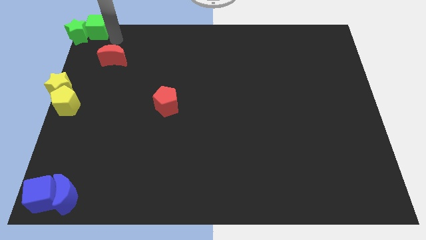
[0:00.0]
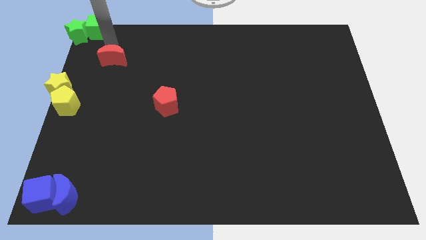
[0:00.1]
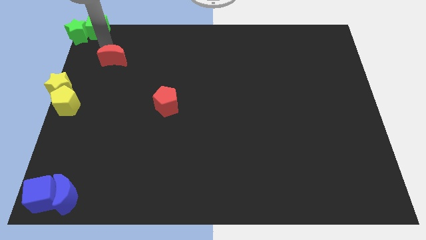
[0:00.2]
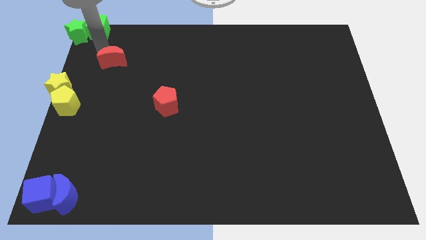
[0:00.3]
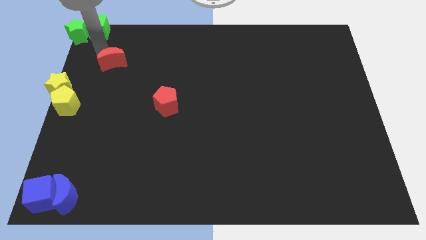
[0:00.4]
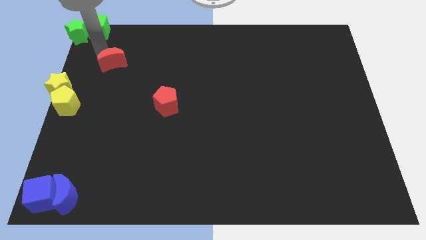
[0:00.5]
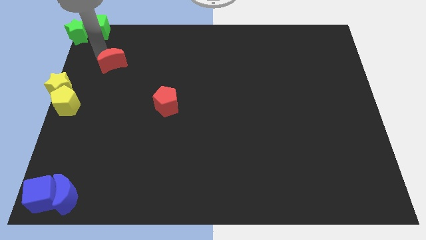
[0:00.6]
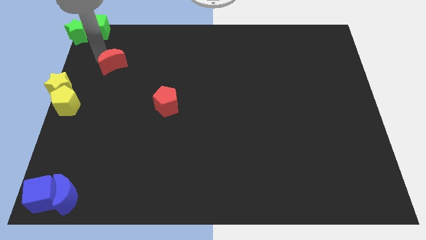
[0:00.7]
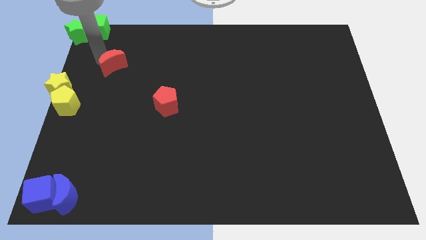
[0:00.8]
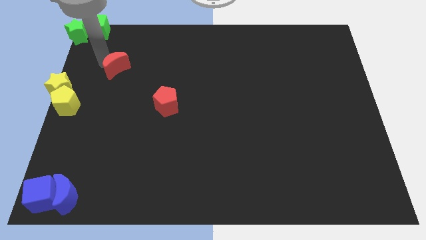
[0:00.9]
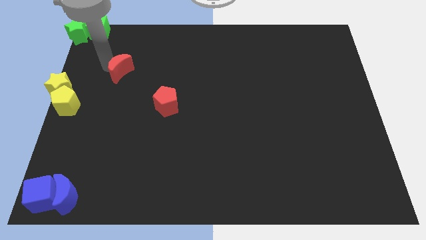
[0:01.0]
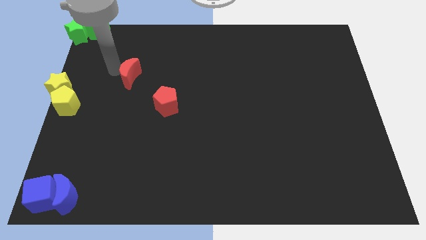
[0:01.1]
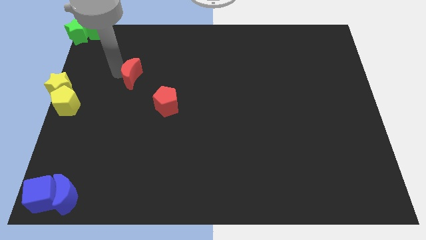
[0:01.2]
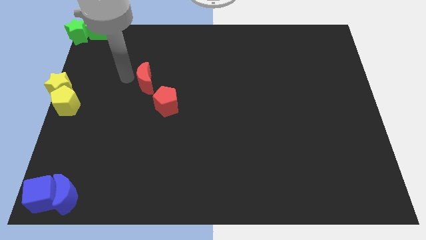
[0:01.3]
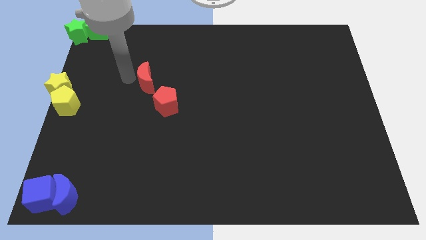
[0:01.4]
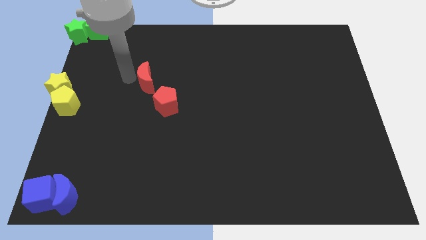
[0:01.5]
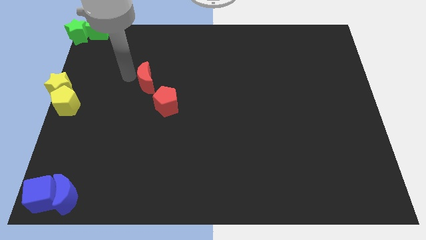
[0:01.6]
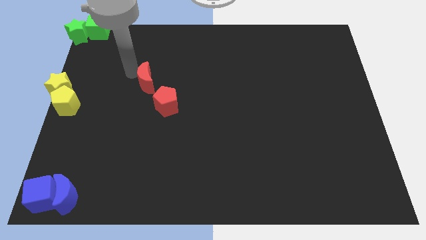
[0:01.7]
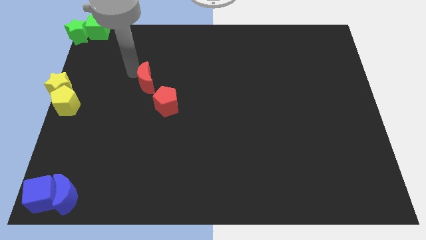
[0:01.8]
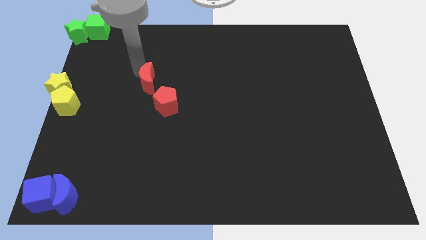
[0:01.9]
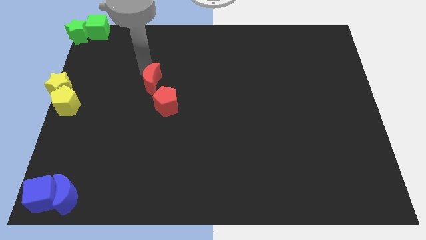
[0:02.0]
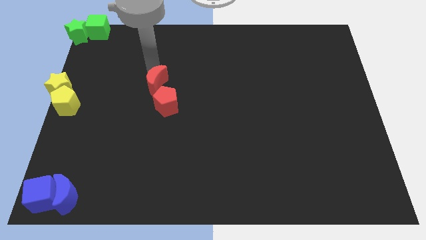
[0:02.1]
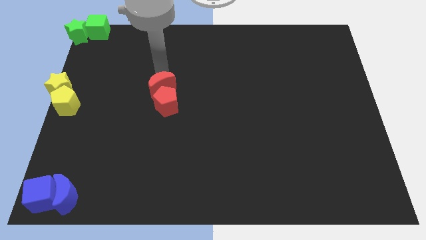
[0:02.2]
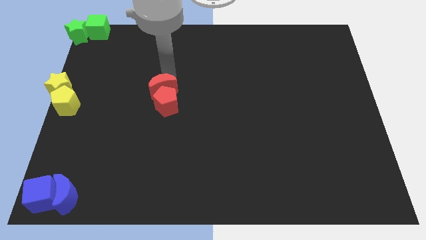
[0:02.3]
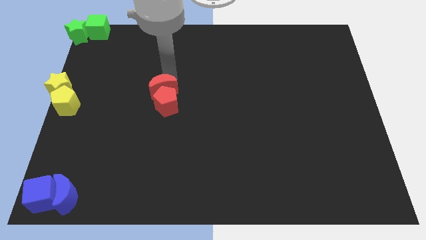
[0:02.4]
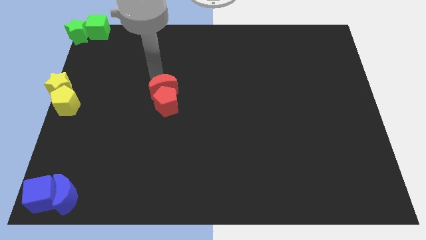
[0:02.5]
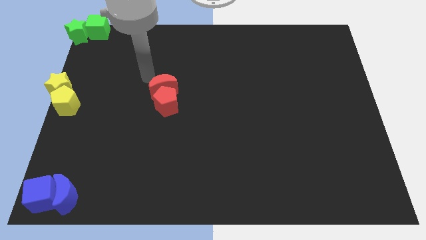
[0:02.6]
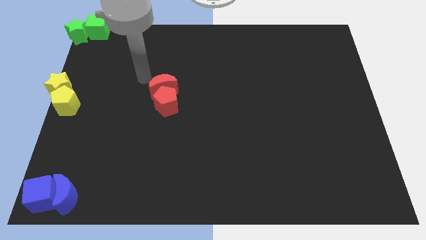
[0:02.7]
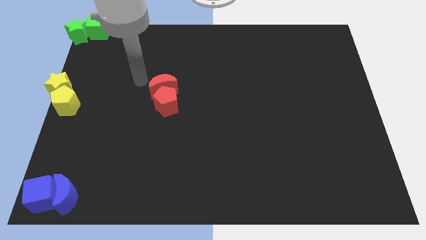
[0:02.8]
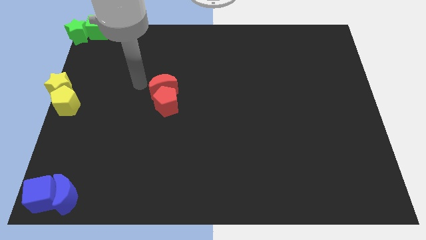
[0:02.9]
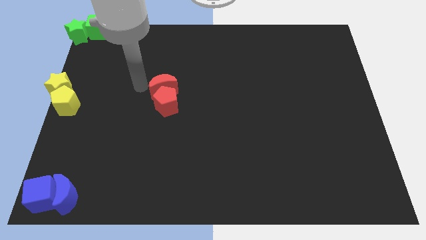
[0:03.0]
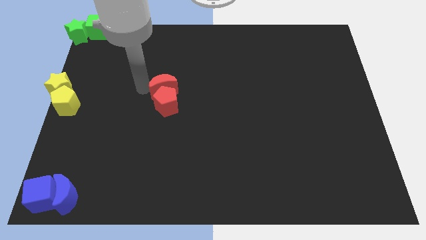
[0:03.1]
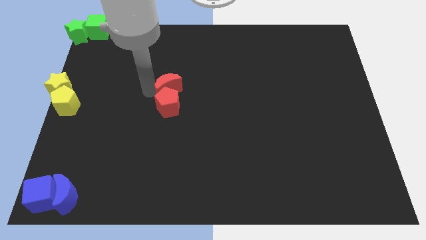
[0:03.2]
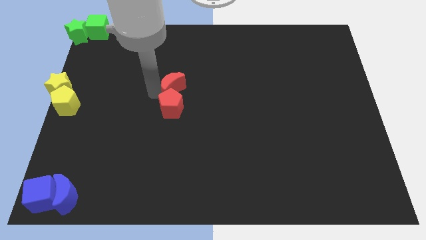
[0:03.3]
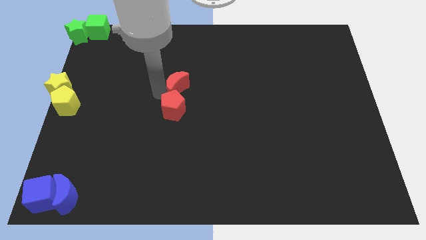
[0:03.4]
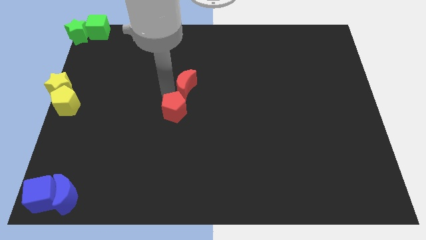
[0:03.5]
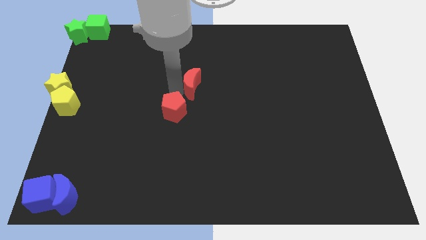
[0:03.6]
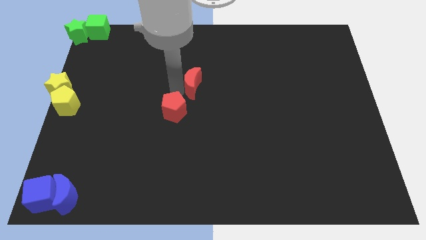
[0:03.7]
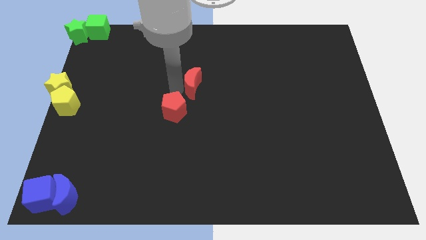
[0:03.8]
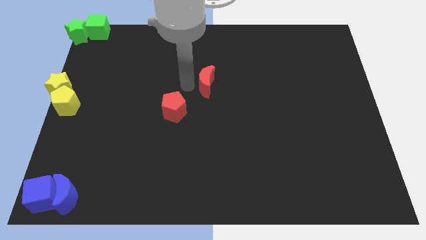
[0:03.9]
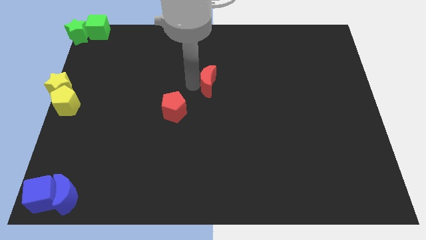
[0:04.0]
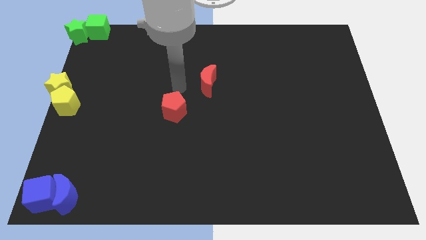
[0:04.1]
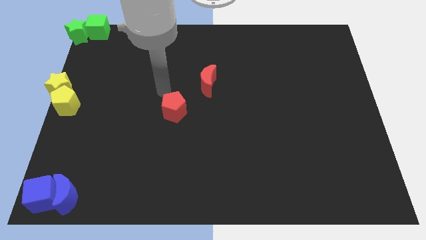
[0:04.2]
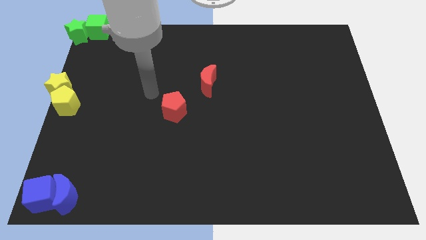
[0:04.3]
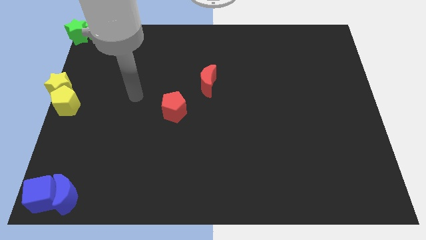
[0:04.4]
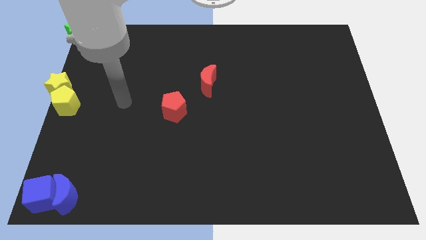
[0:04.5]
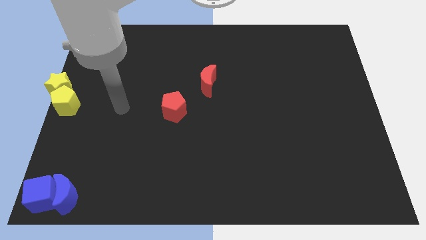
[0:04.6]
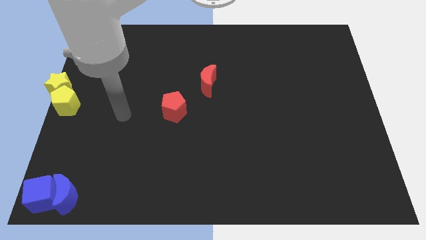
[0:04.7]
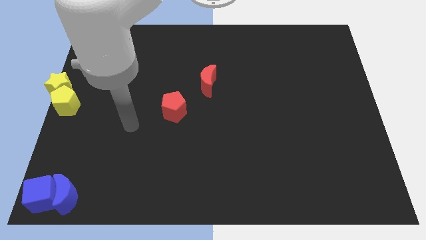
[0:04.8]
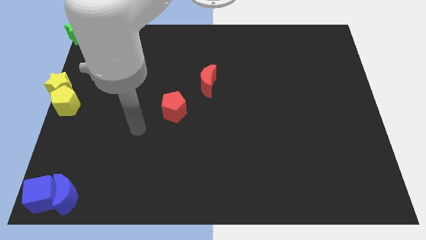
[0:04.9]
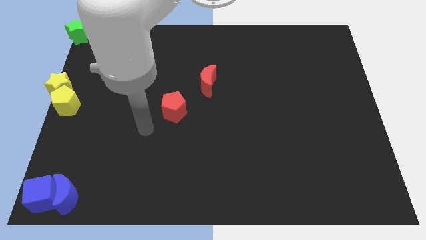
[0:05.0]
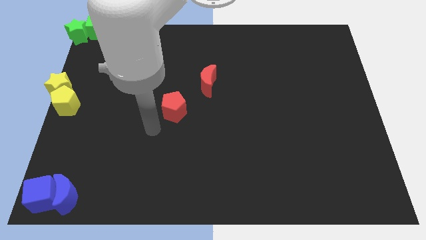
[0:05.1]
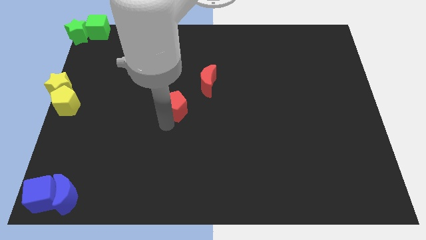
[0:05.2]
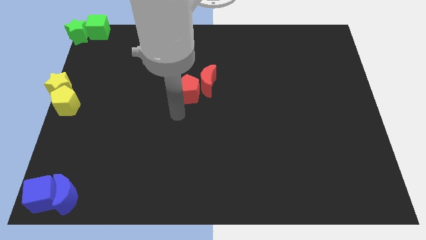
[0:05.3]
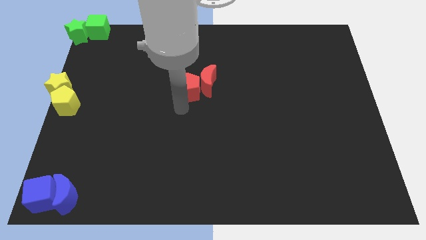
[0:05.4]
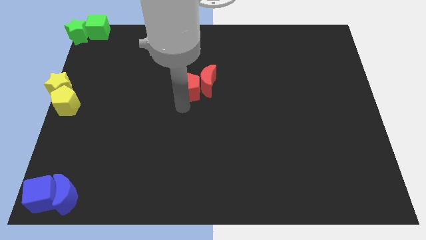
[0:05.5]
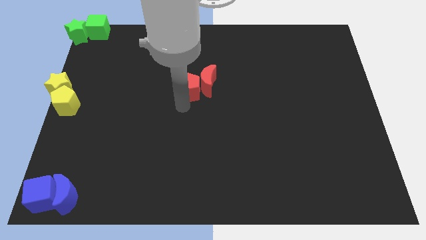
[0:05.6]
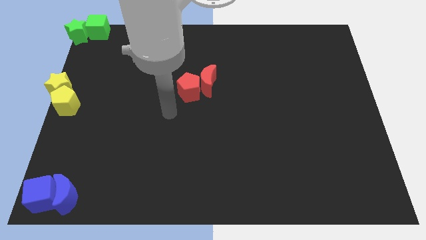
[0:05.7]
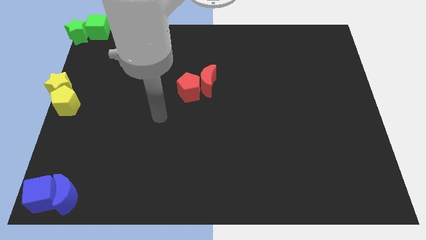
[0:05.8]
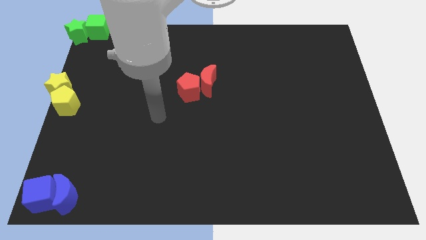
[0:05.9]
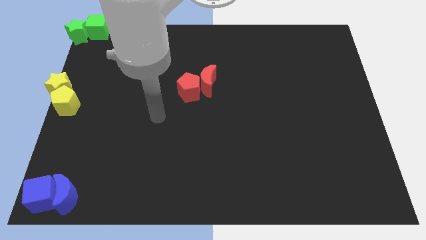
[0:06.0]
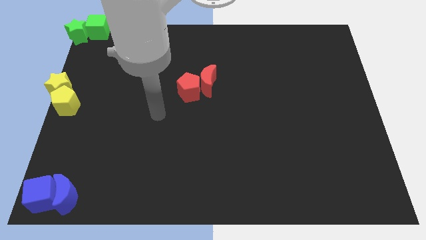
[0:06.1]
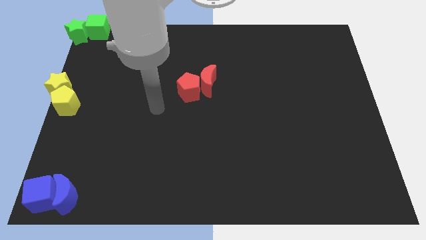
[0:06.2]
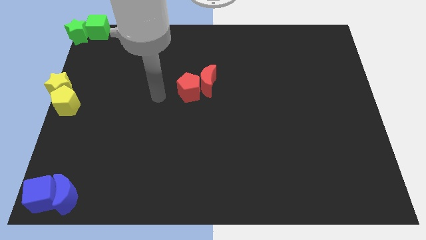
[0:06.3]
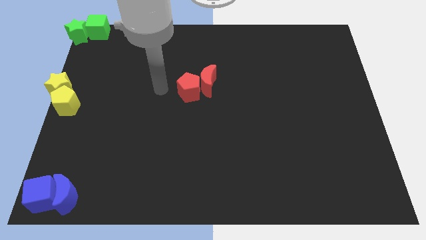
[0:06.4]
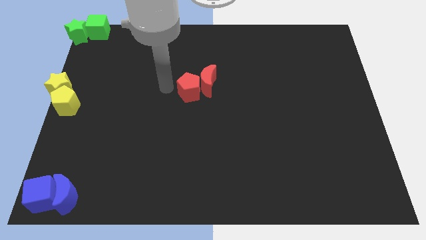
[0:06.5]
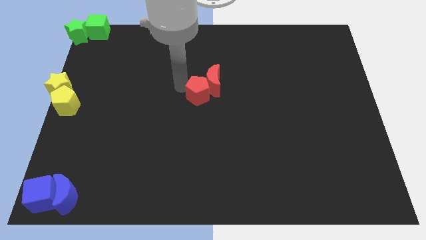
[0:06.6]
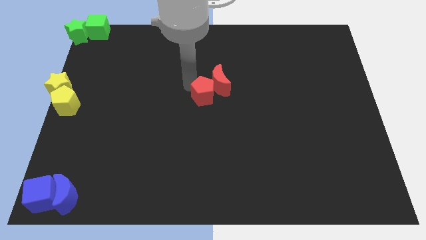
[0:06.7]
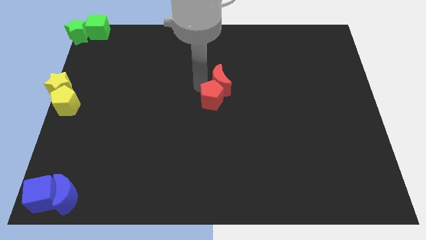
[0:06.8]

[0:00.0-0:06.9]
place the red blocks towards center of the board

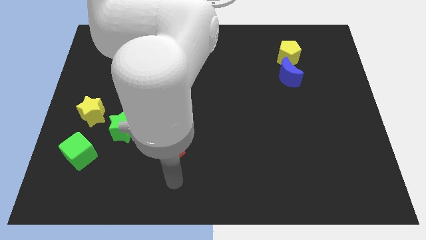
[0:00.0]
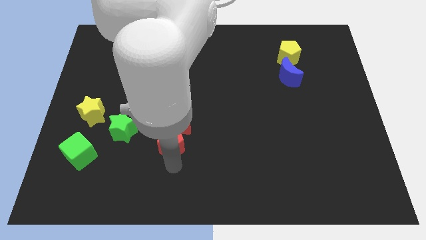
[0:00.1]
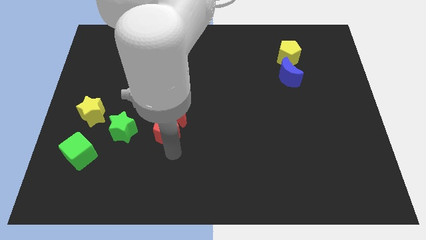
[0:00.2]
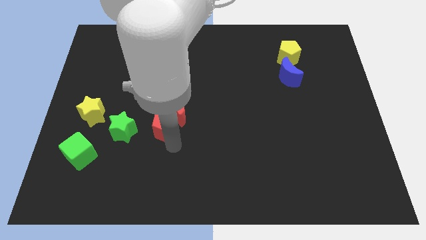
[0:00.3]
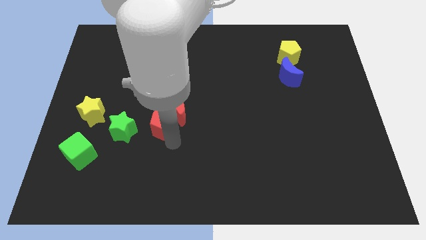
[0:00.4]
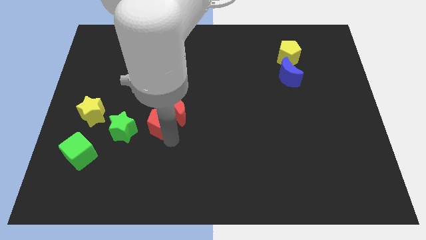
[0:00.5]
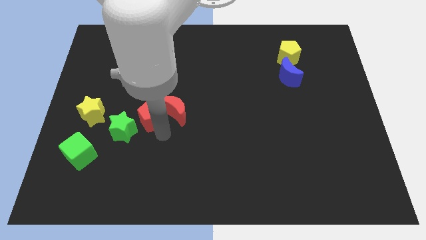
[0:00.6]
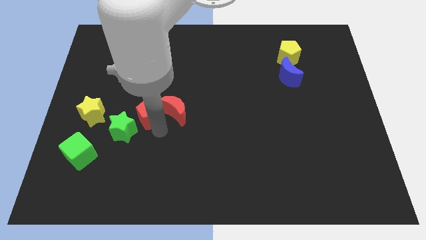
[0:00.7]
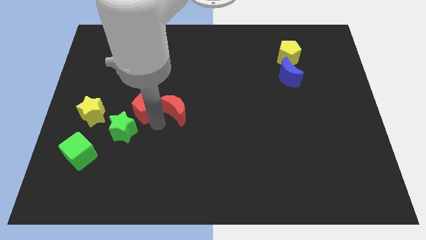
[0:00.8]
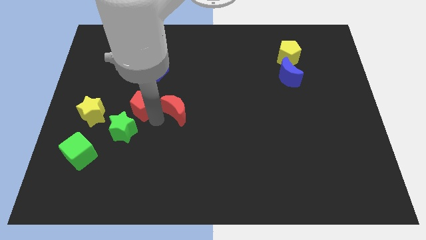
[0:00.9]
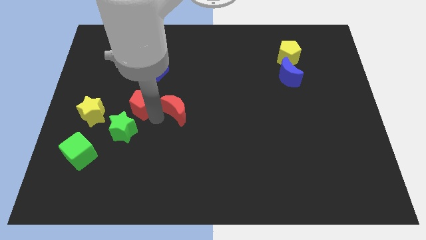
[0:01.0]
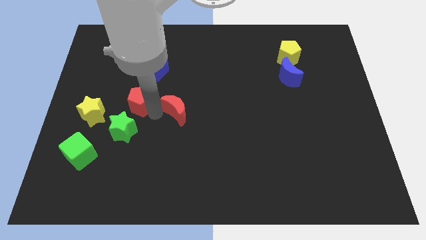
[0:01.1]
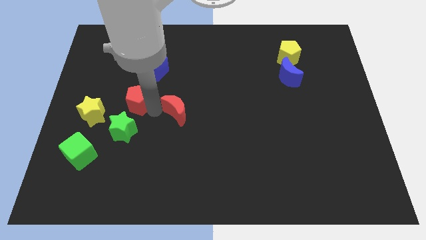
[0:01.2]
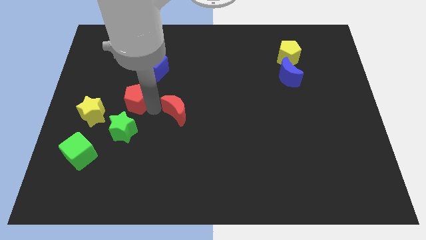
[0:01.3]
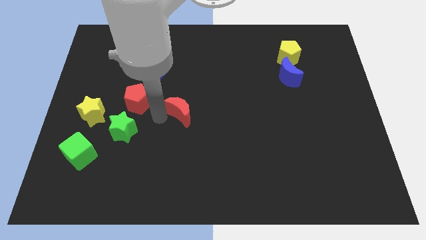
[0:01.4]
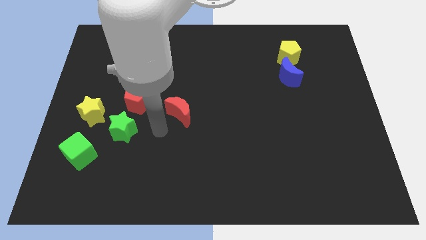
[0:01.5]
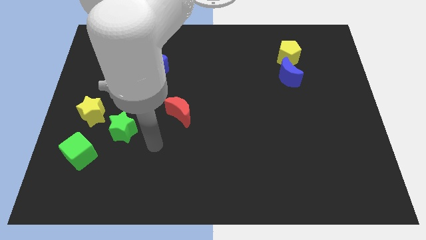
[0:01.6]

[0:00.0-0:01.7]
push the red pentagon upwards slightly

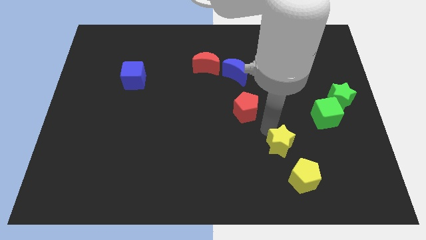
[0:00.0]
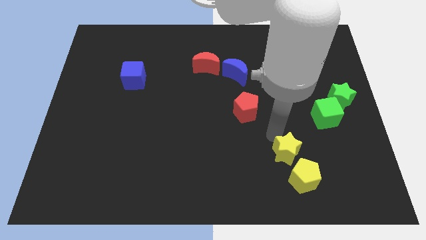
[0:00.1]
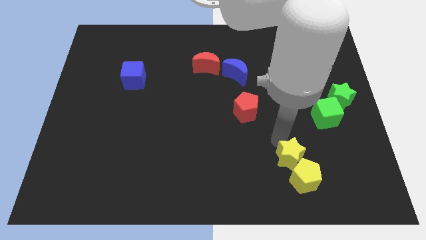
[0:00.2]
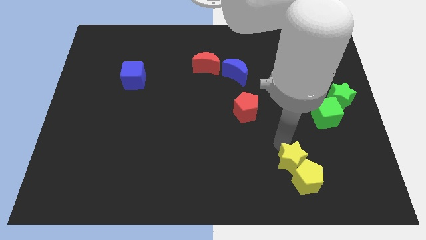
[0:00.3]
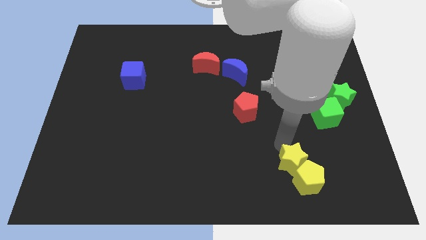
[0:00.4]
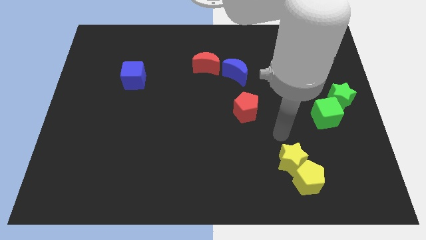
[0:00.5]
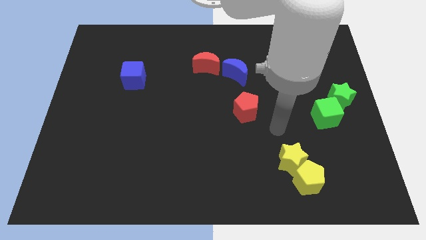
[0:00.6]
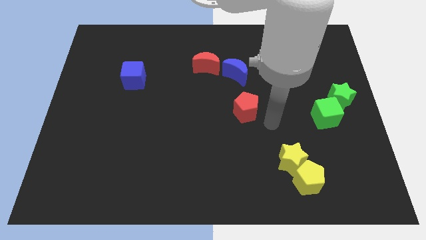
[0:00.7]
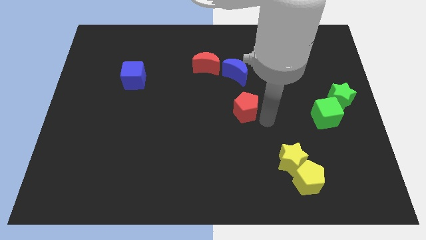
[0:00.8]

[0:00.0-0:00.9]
push the yellow star into the yellow pentagon
